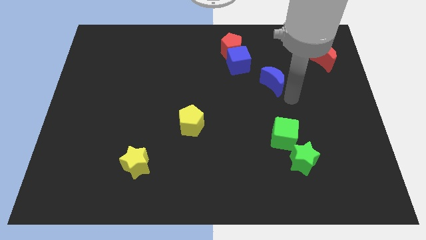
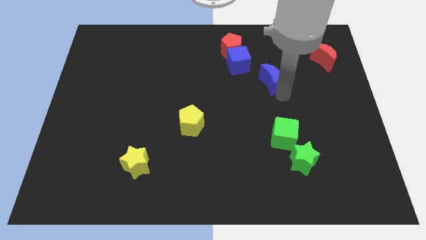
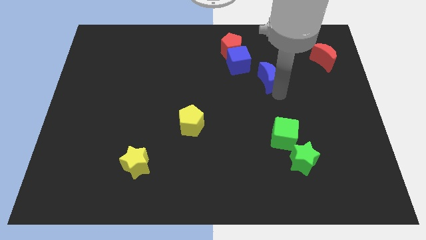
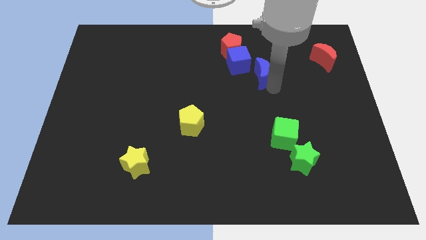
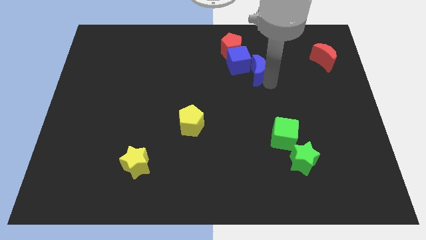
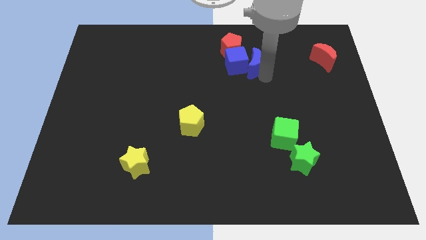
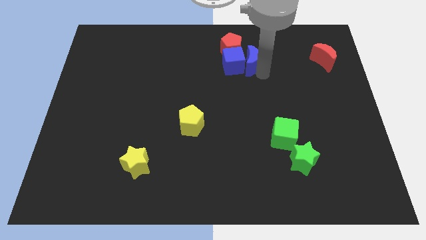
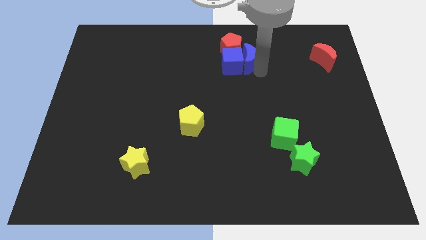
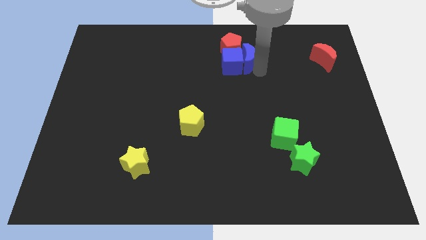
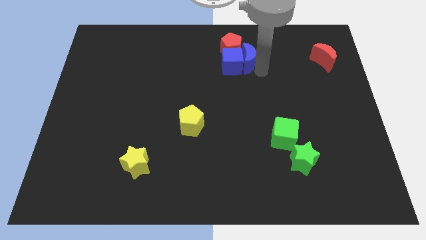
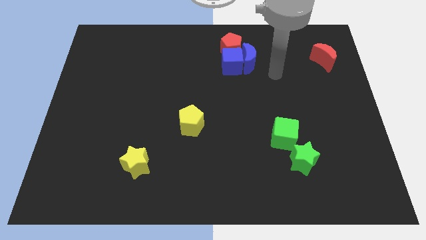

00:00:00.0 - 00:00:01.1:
move the blue moon to the right of the blue cube

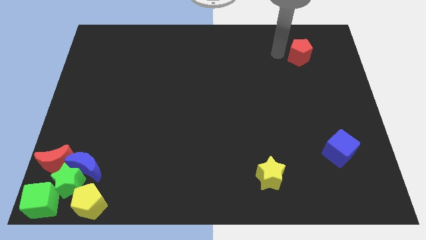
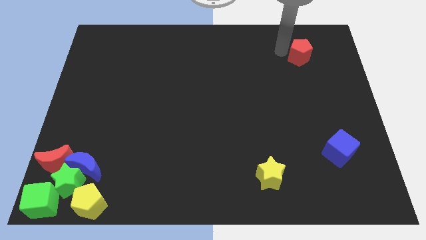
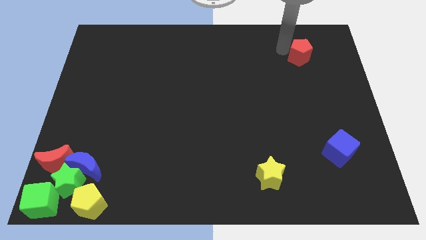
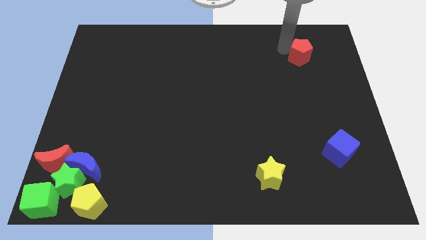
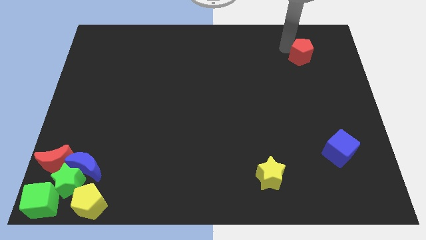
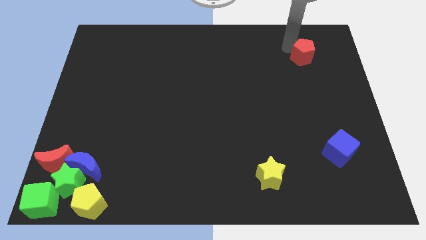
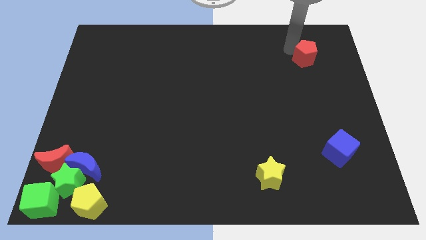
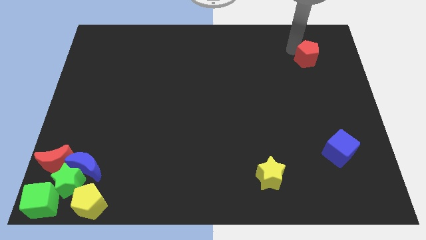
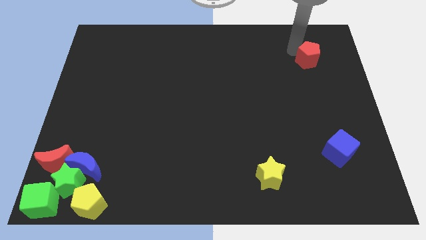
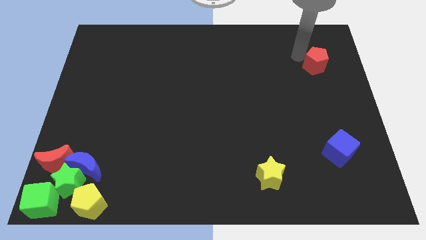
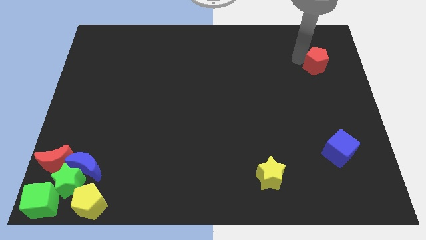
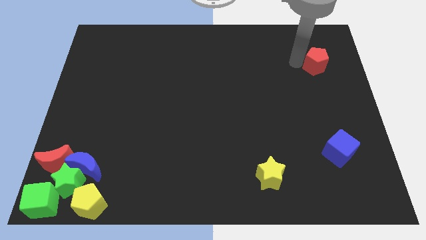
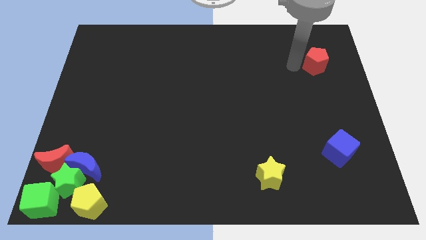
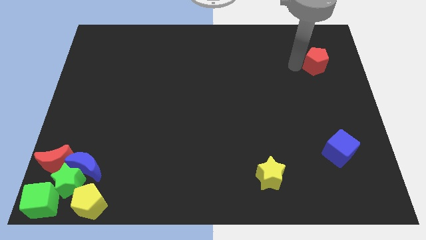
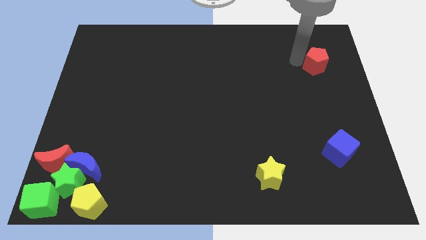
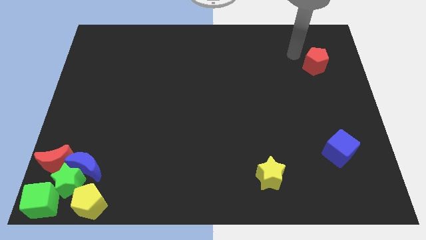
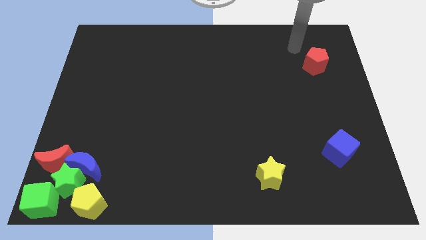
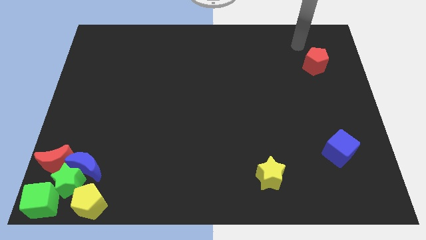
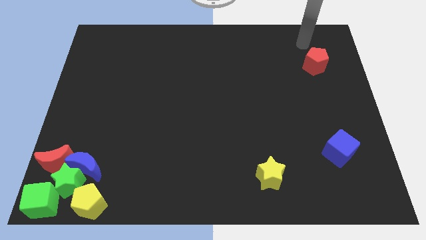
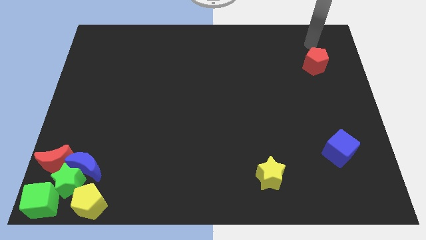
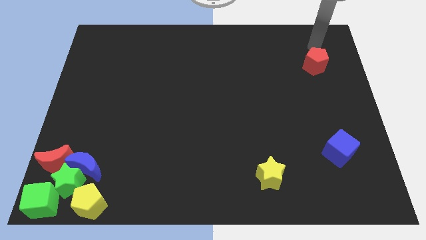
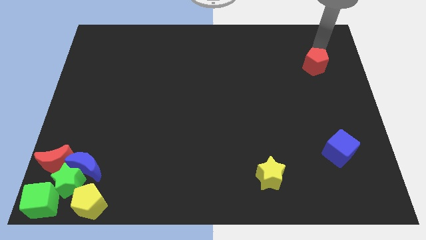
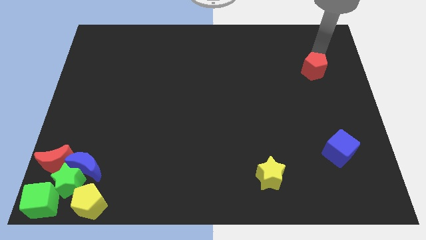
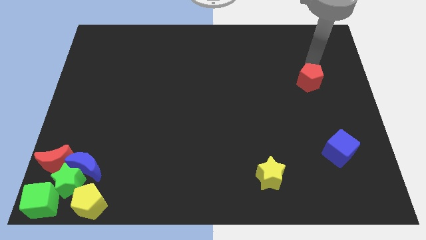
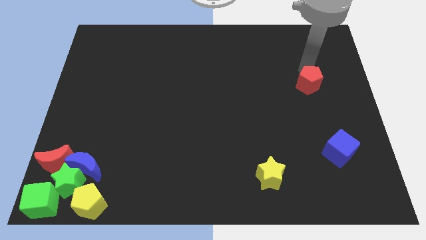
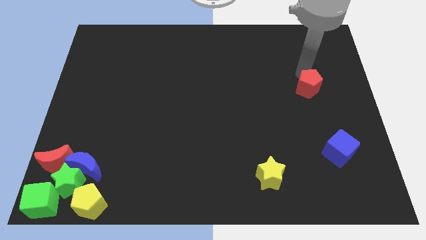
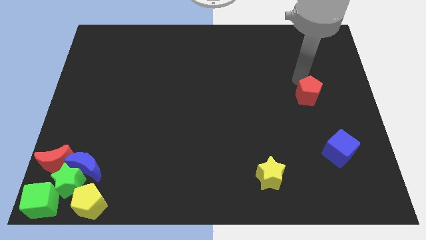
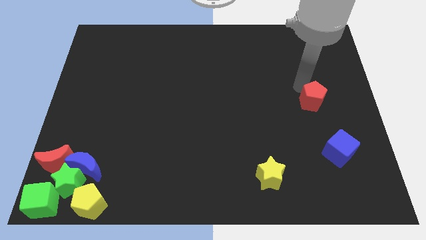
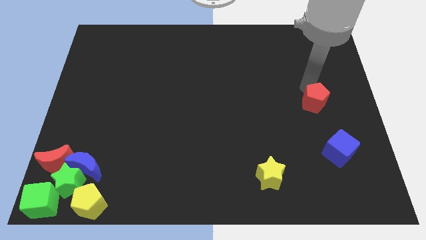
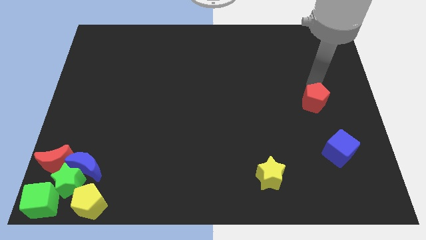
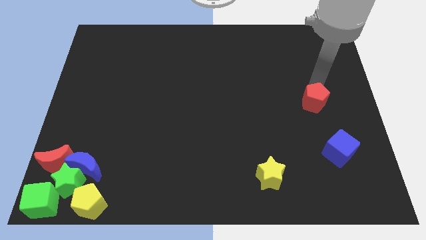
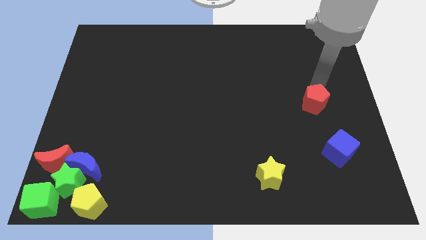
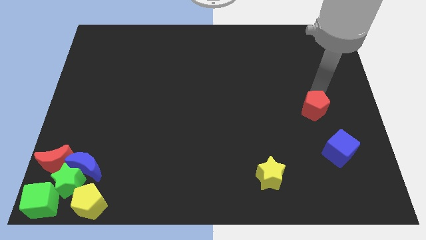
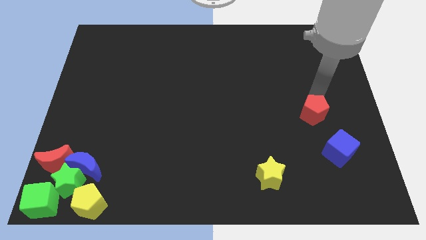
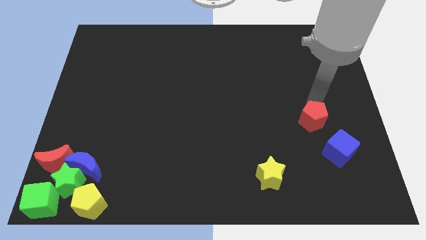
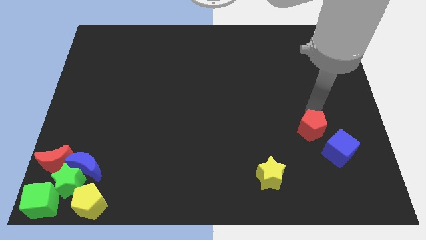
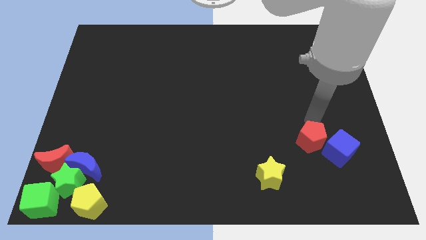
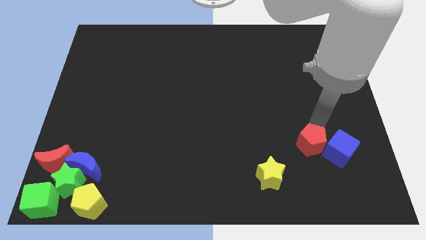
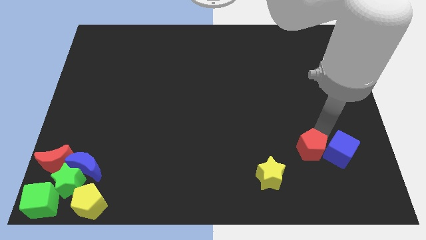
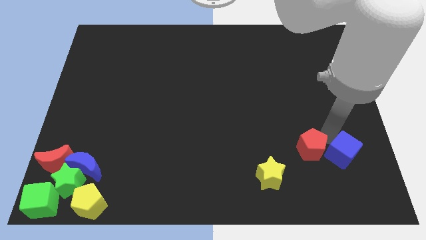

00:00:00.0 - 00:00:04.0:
move the red pentagon to the left side of the blue cube

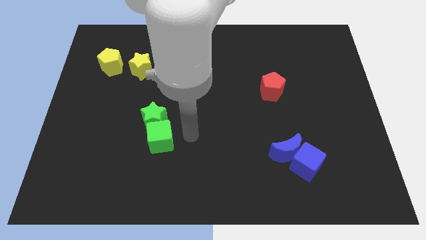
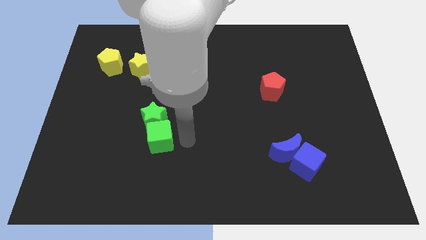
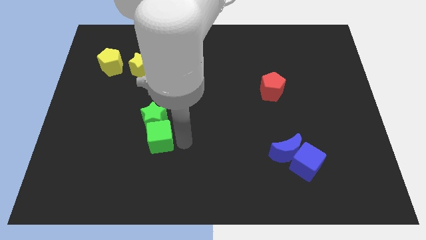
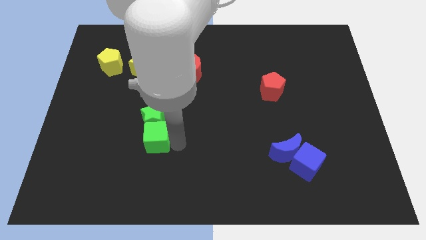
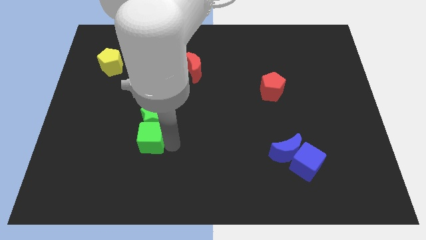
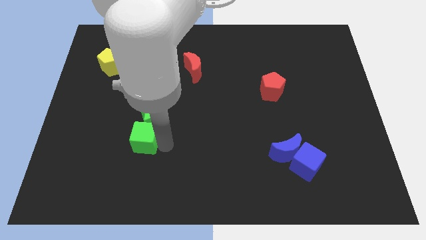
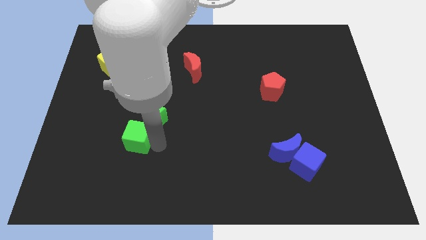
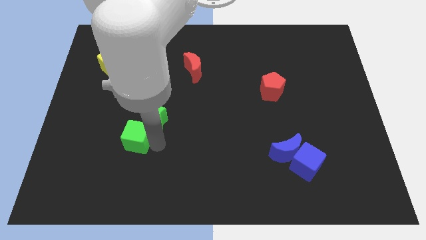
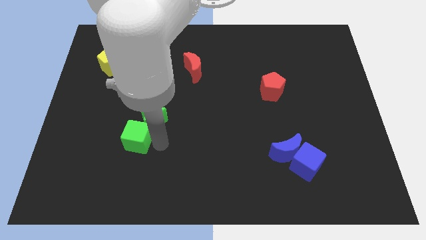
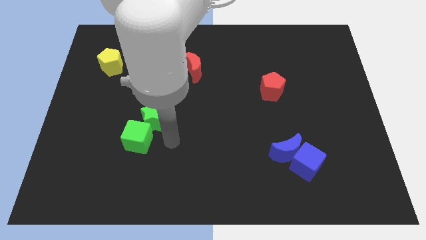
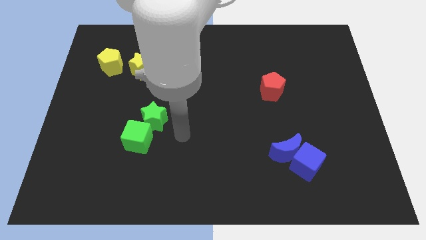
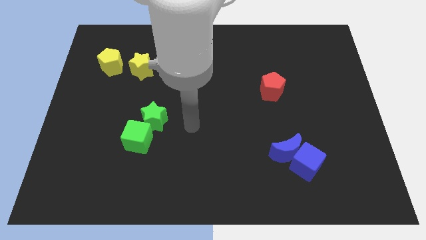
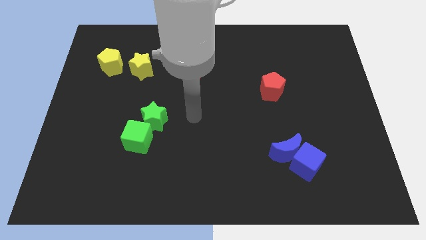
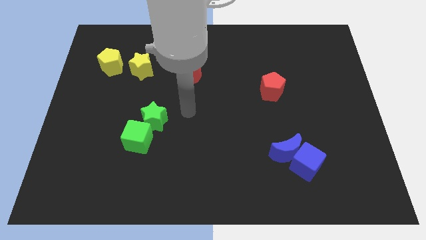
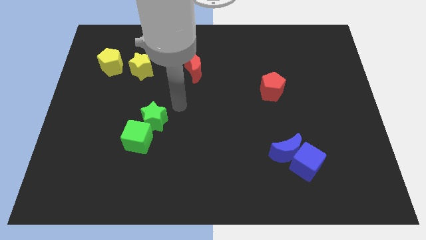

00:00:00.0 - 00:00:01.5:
place green cube close to green star

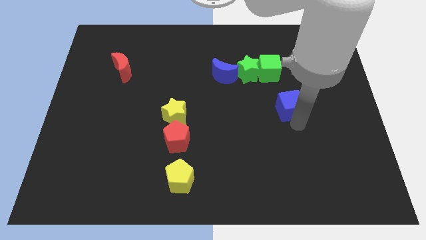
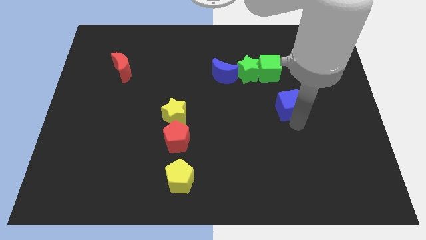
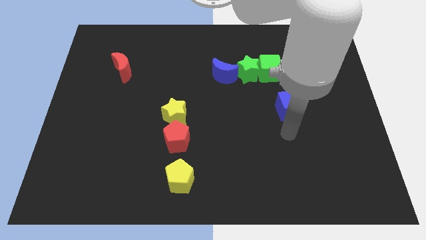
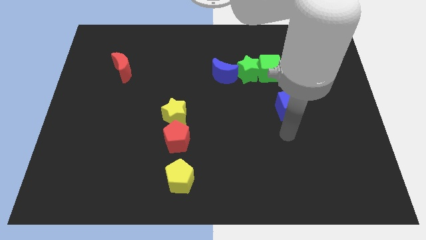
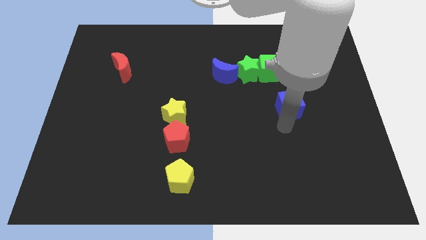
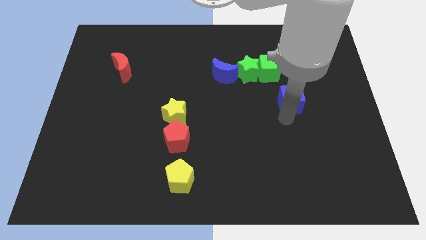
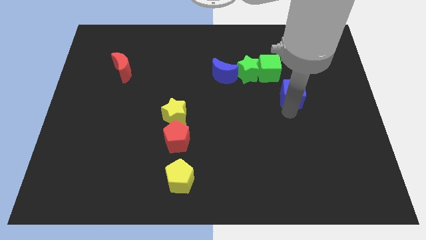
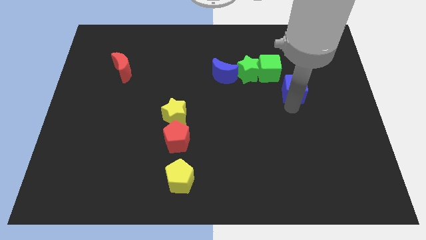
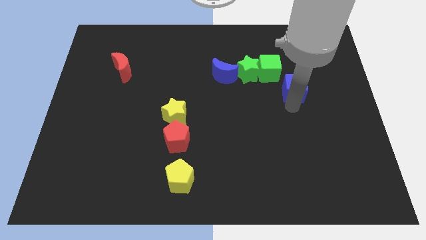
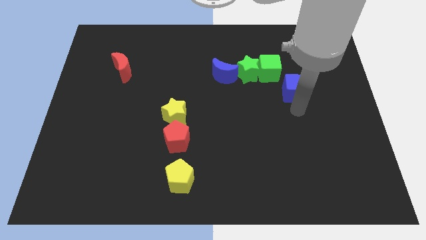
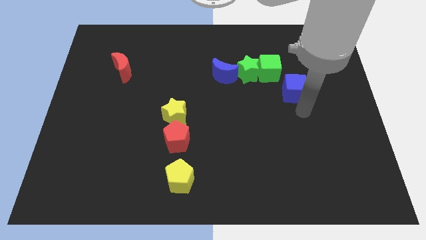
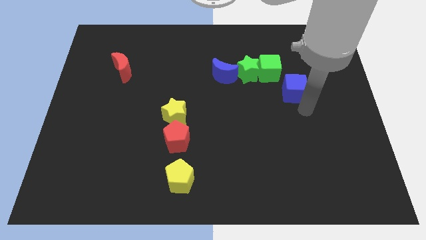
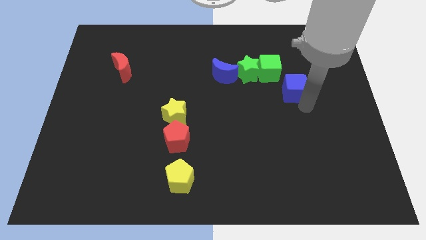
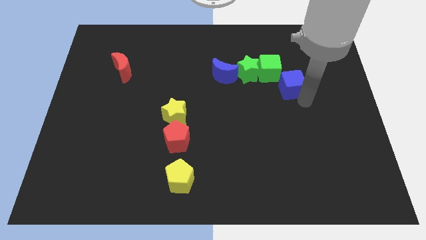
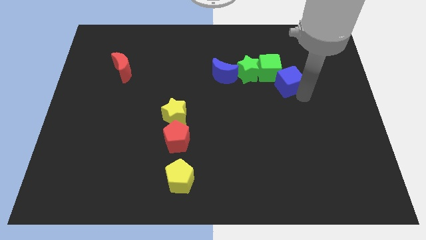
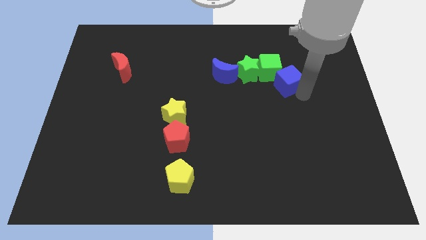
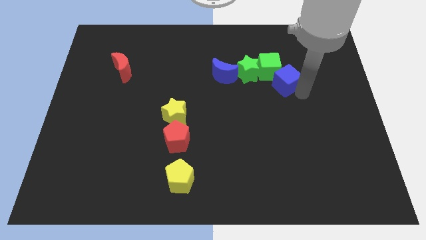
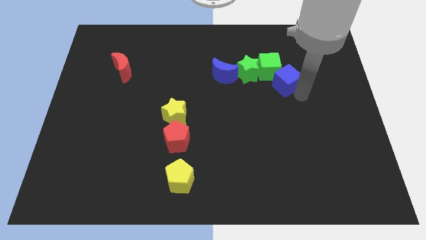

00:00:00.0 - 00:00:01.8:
place the blue cube below to the green cube

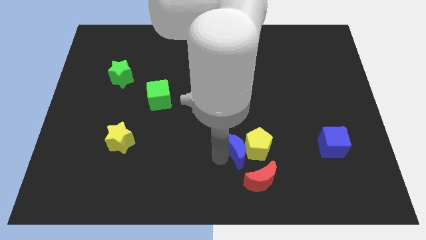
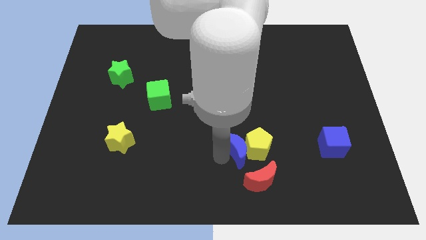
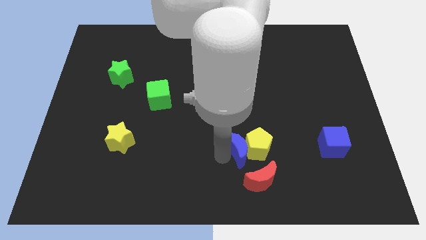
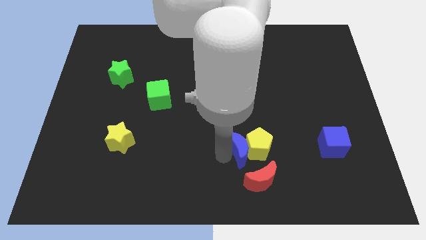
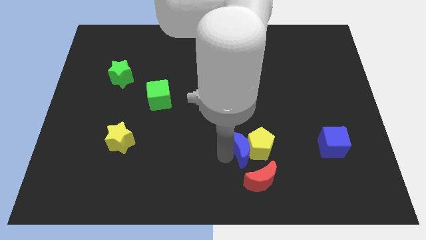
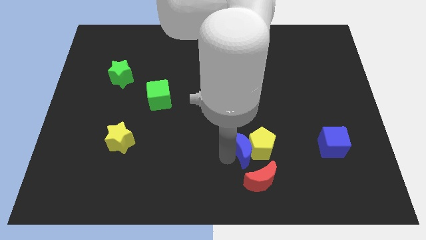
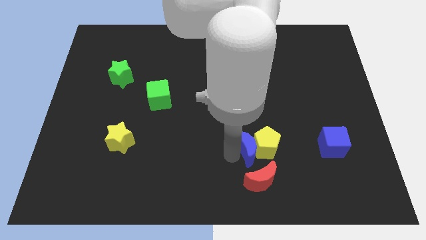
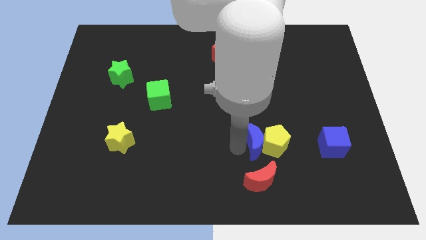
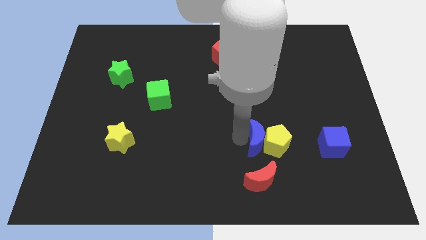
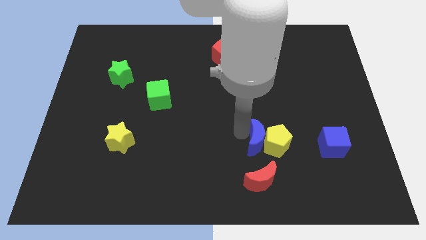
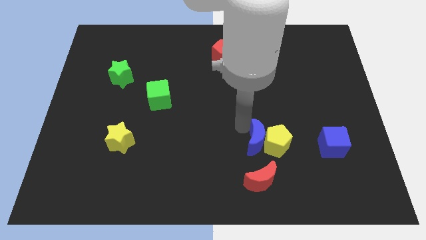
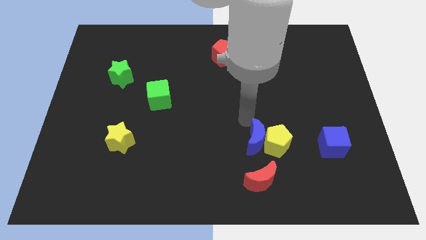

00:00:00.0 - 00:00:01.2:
push blue crescent into yellow pentagon
